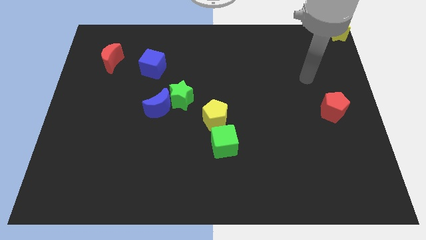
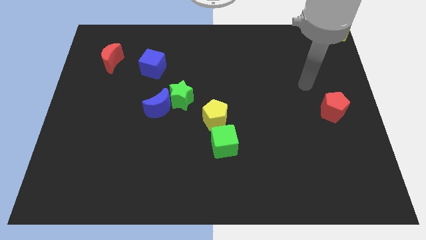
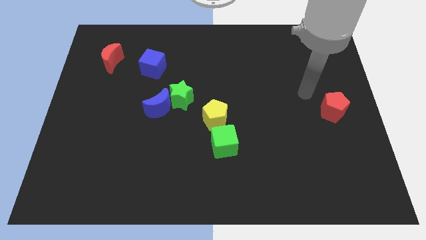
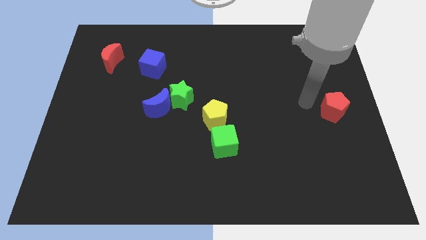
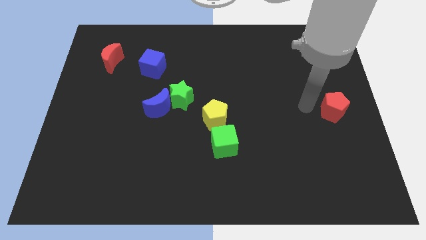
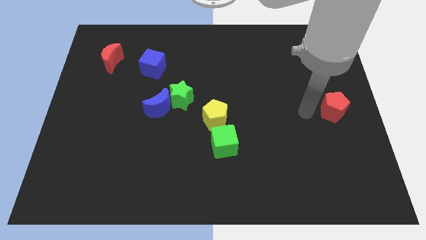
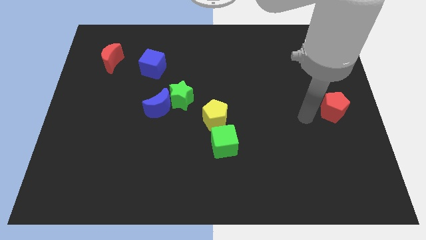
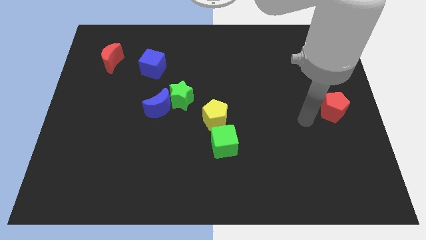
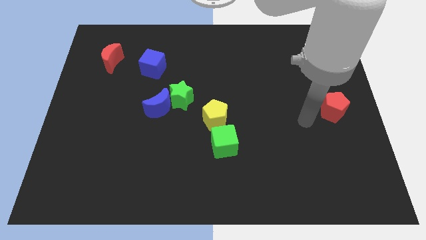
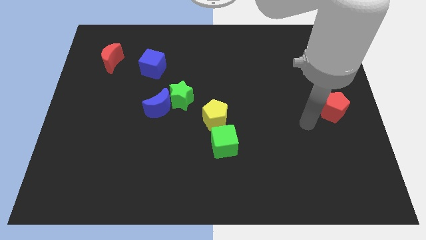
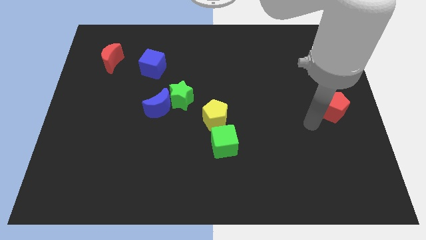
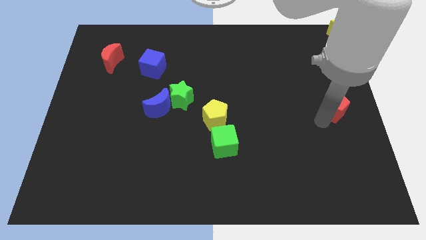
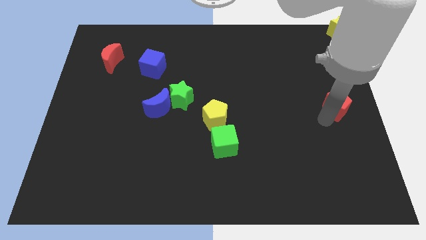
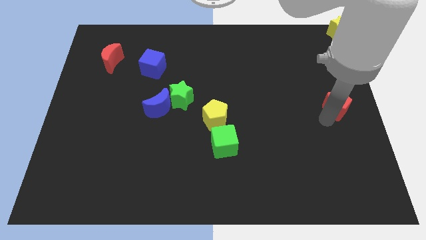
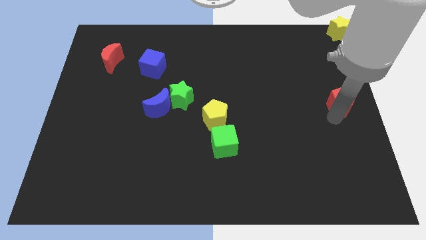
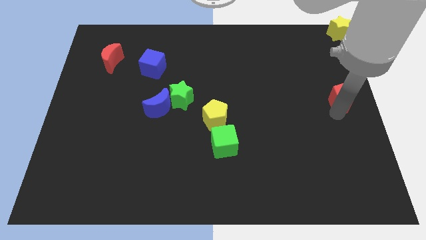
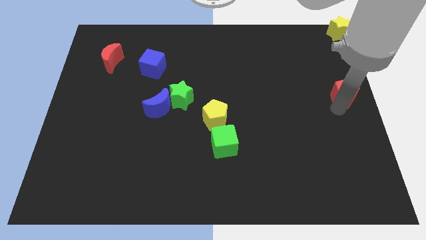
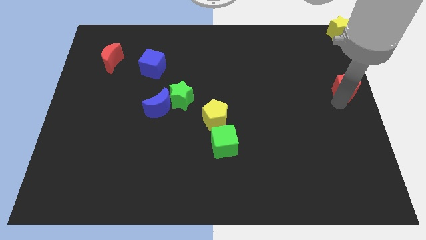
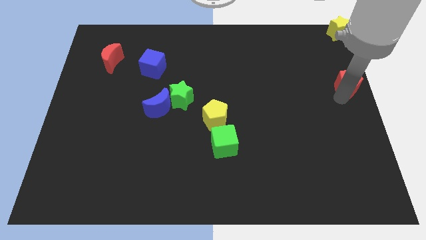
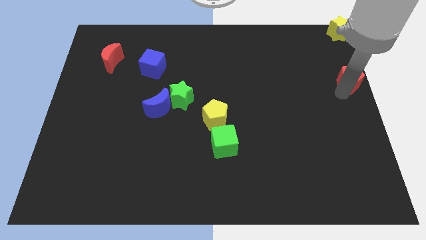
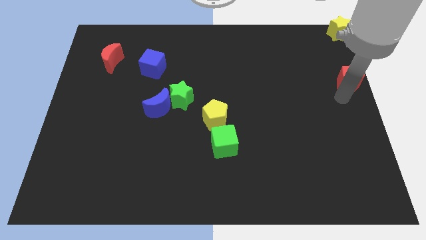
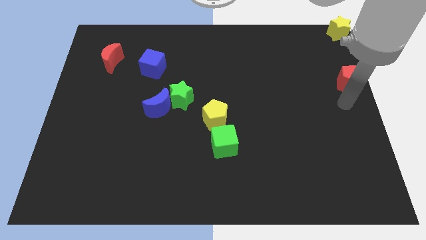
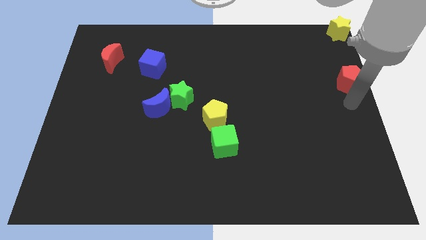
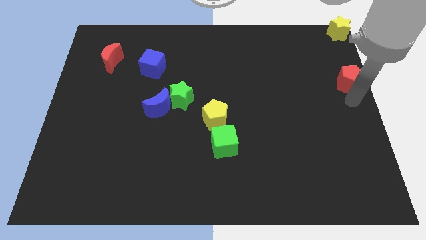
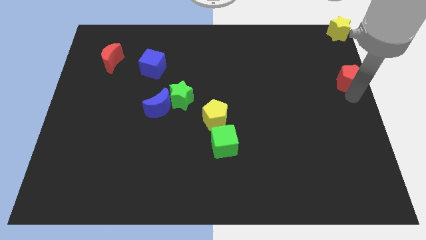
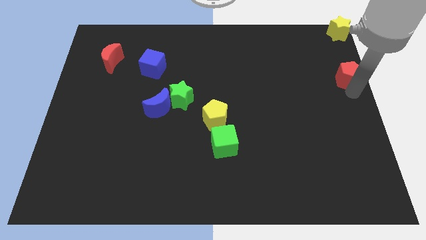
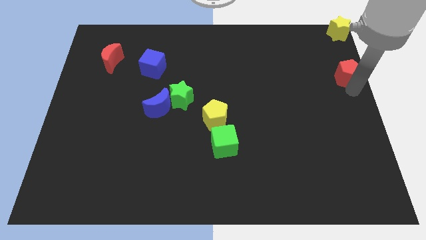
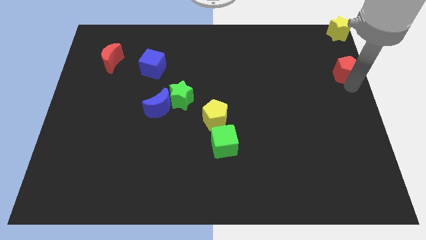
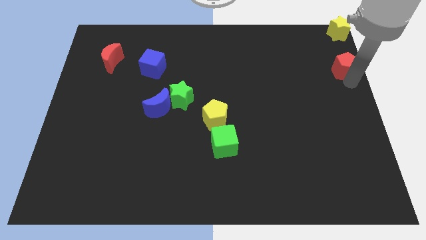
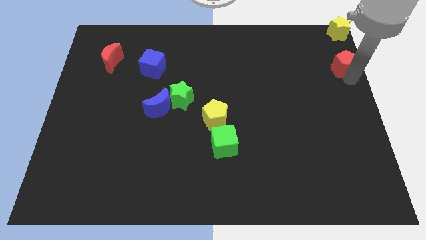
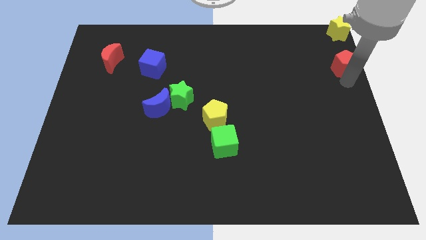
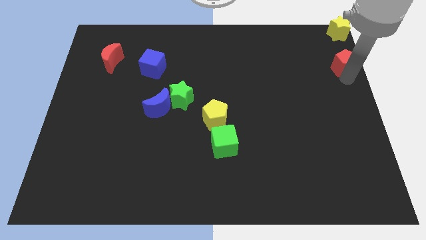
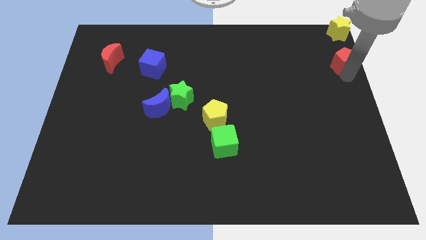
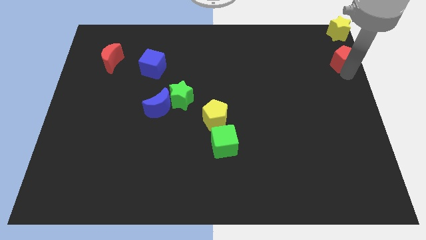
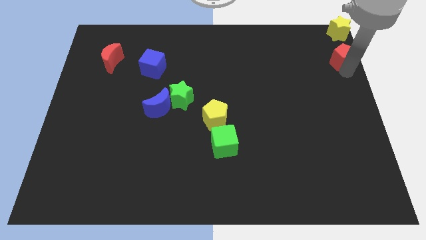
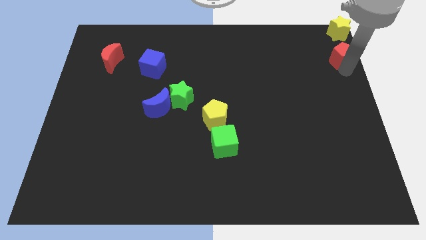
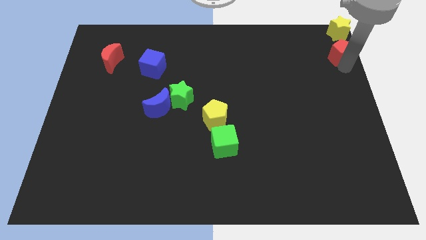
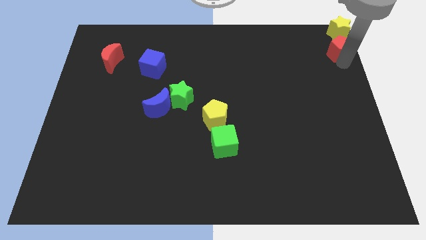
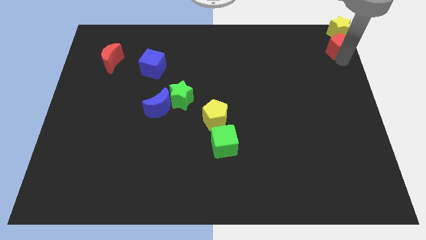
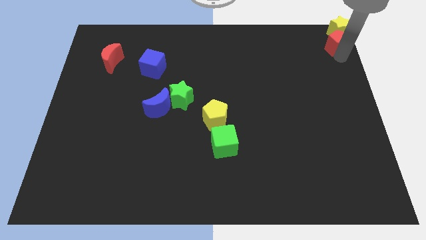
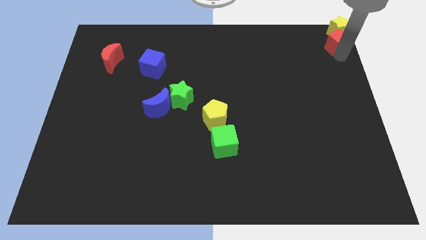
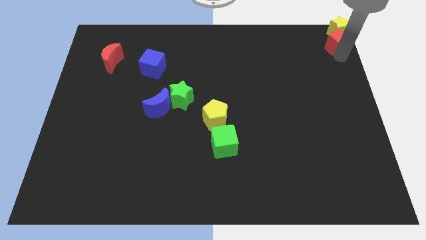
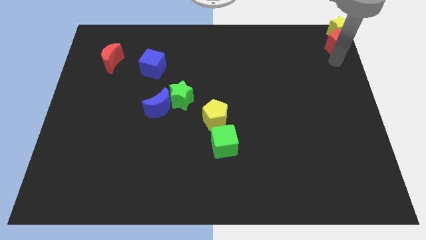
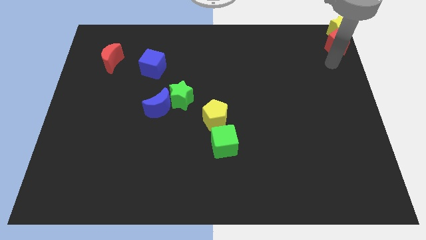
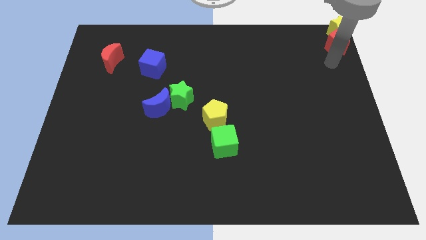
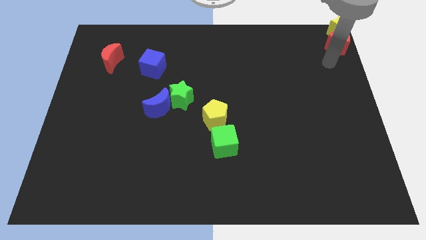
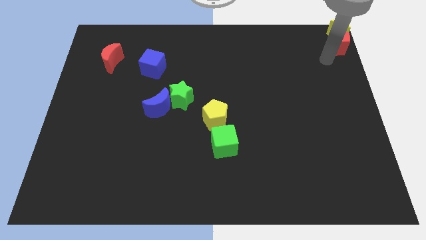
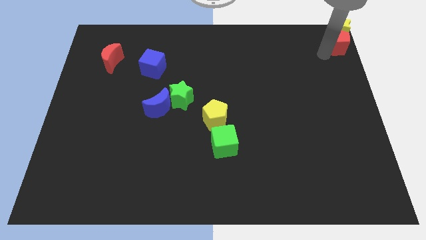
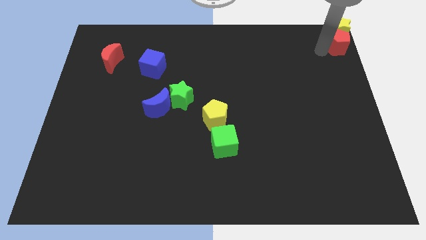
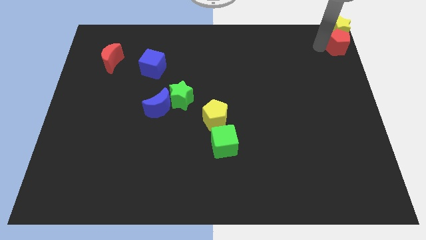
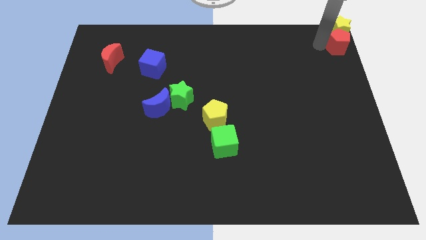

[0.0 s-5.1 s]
place red pentagon below yellow star

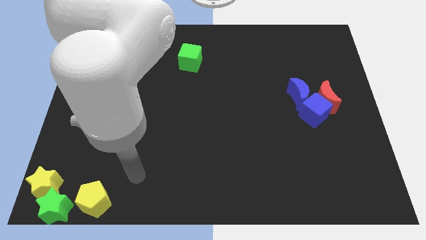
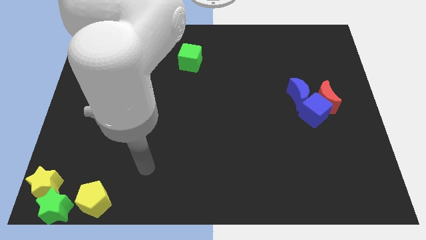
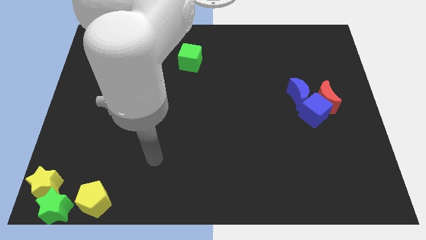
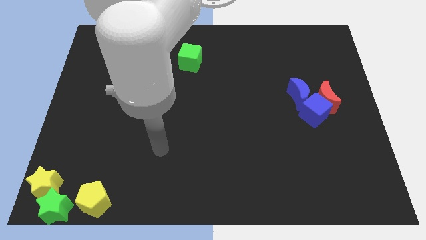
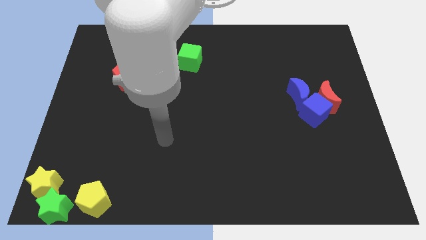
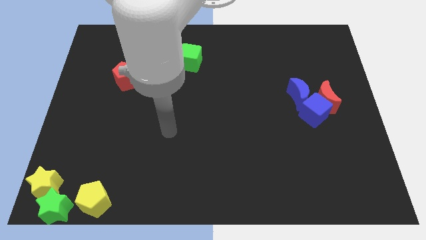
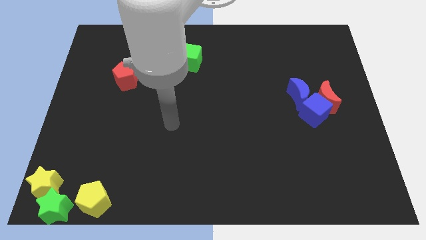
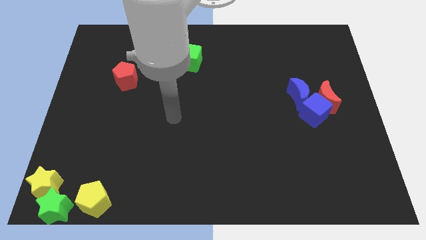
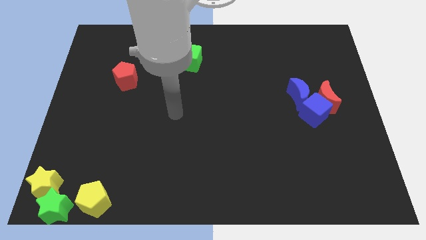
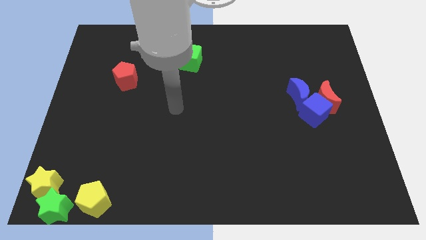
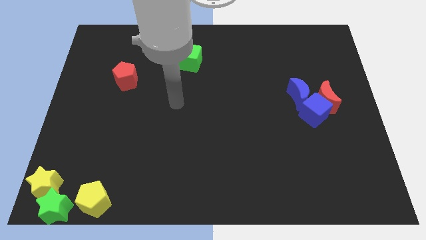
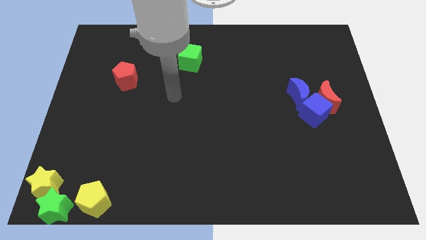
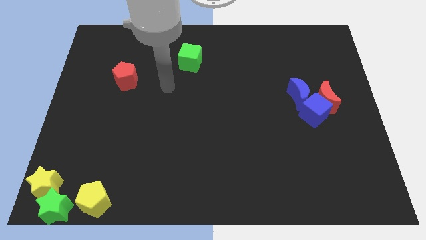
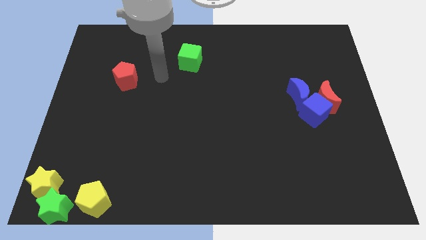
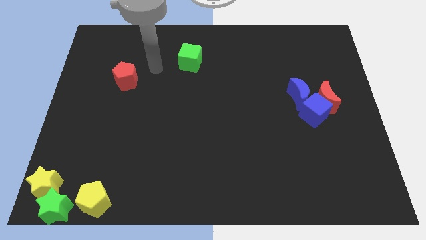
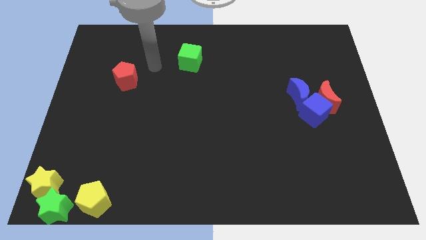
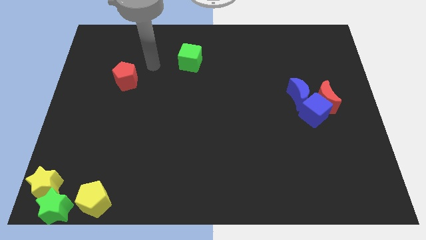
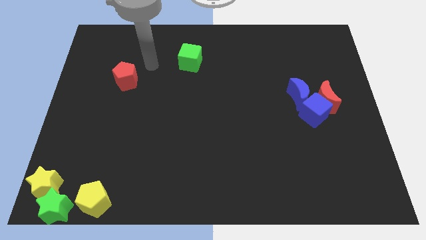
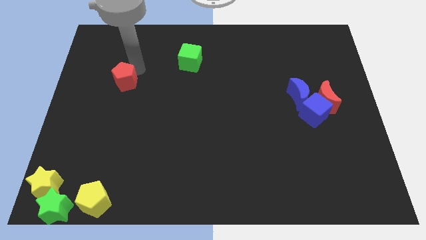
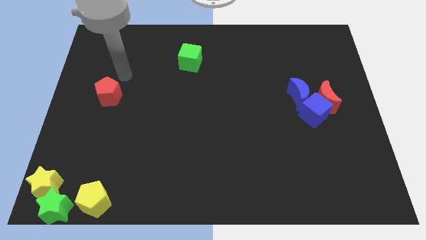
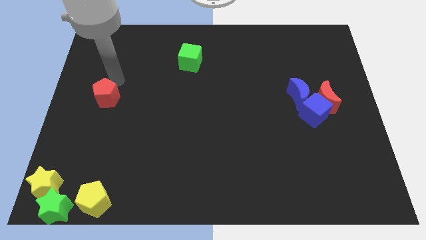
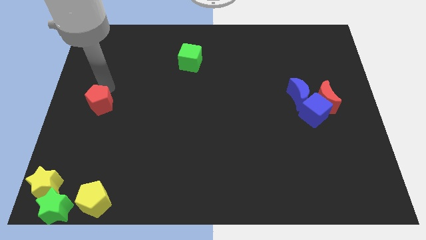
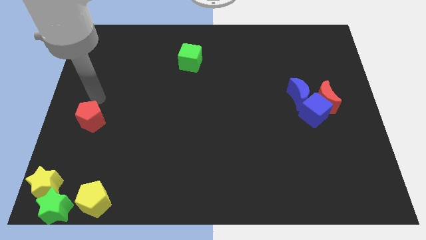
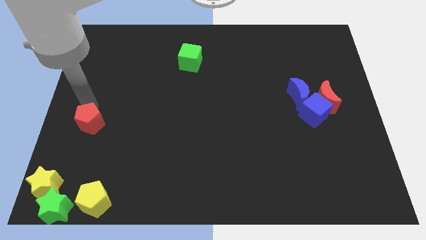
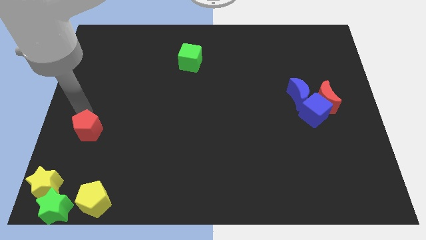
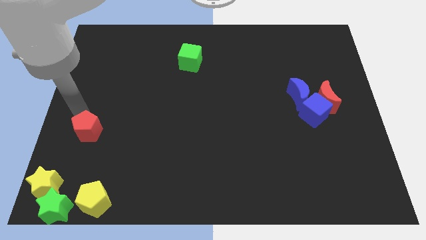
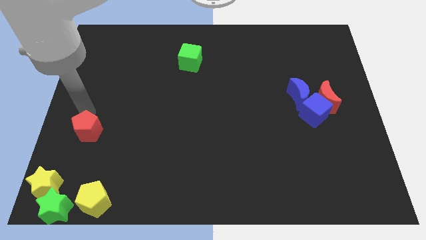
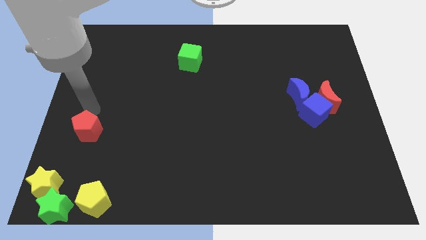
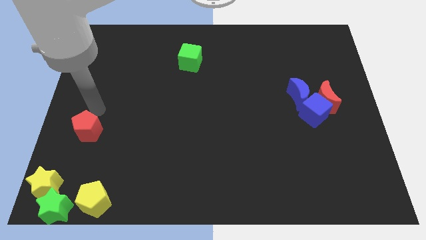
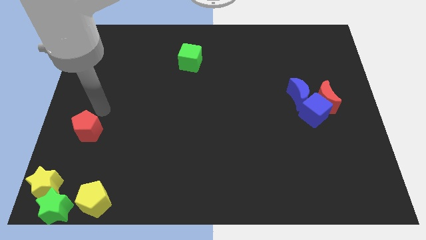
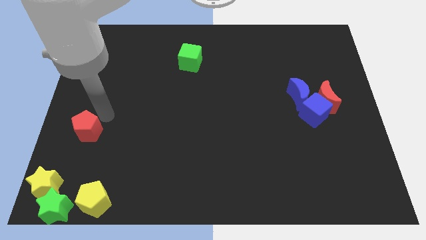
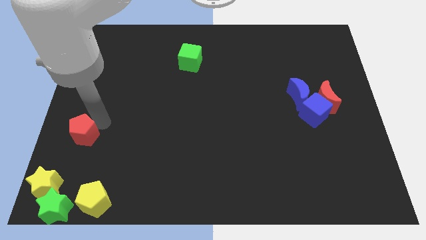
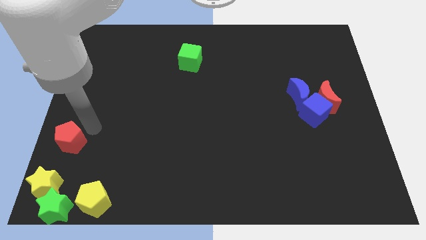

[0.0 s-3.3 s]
drag the red pentagon towards the bottom left side of the board

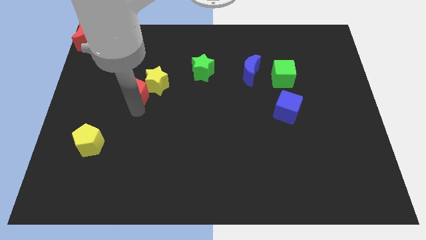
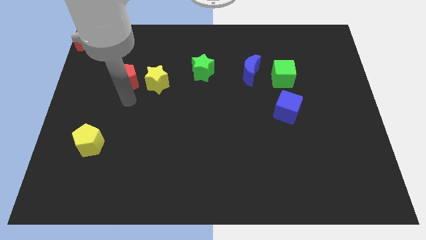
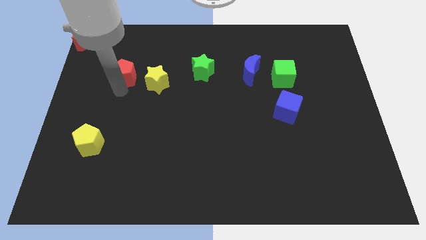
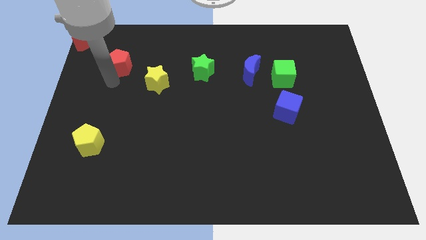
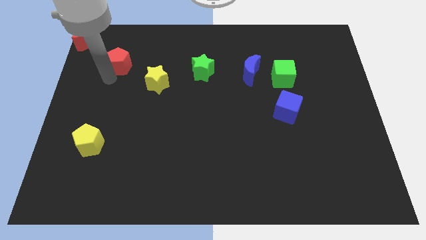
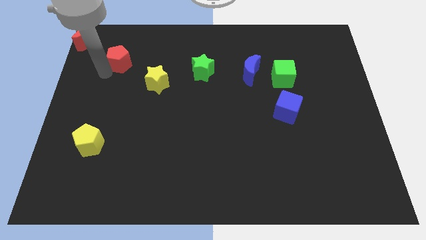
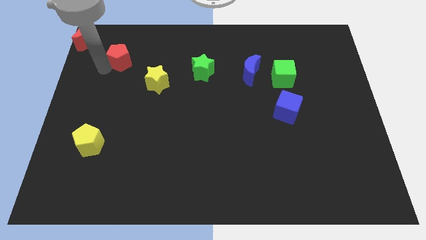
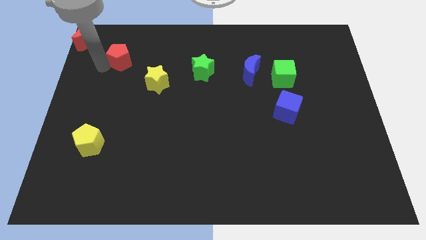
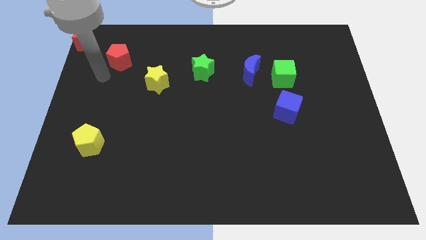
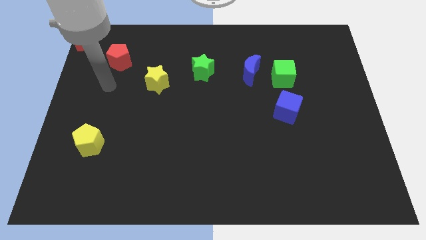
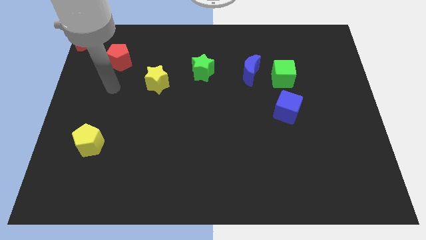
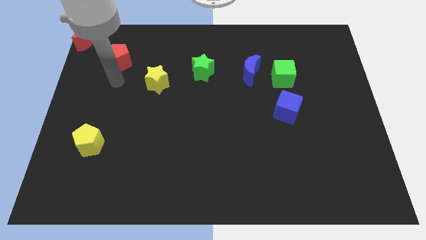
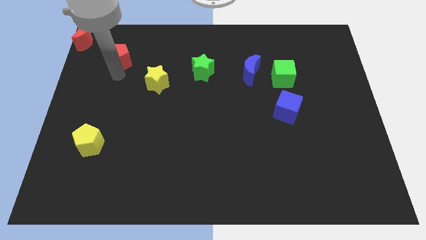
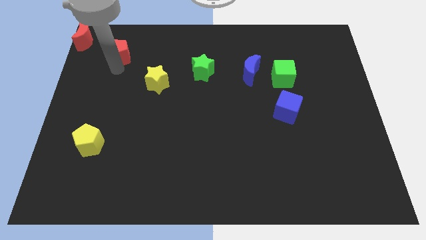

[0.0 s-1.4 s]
place the red pentagon in between the yellow star and red crescent
